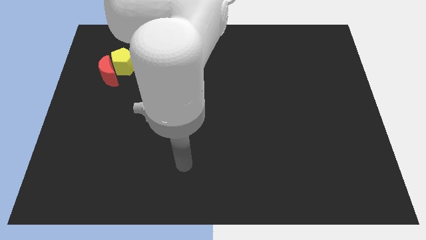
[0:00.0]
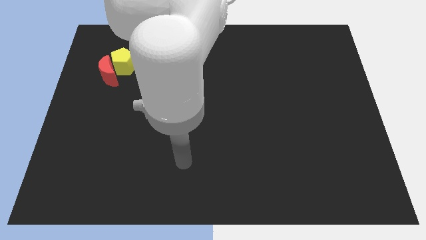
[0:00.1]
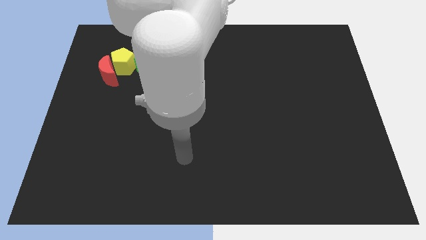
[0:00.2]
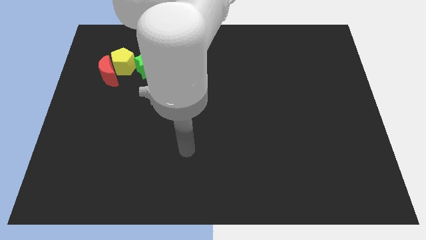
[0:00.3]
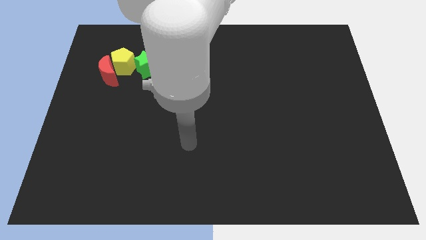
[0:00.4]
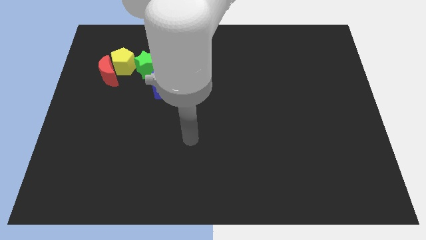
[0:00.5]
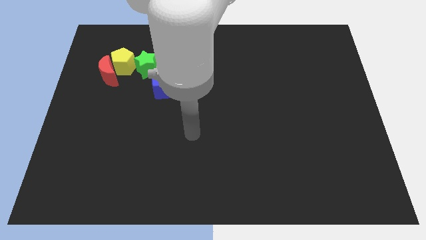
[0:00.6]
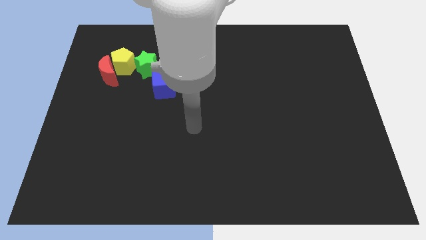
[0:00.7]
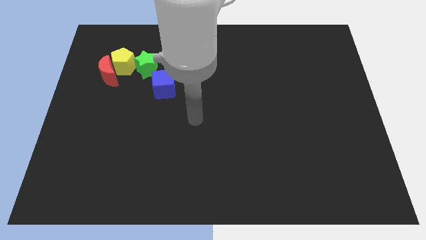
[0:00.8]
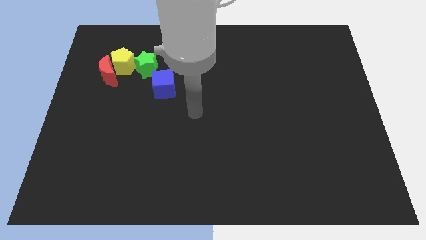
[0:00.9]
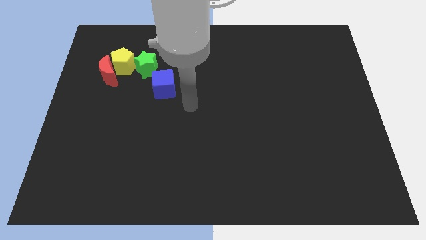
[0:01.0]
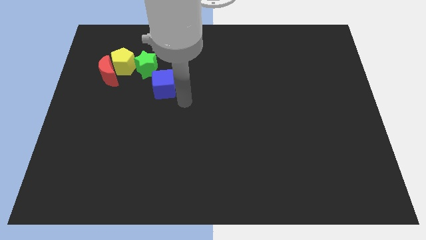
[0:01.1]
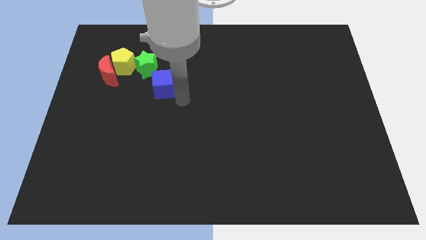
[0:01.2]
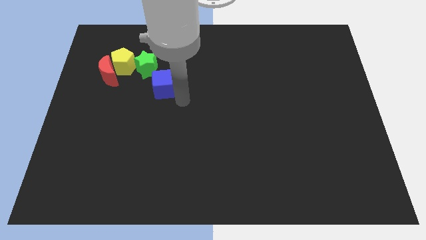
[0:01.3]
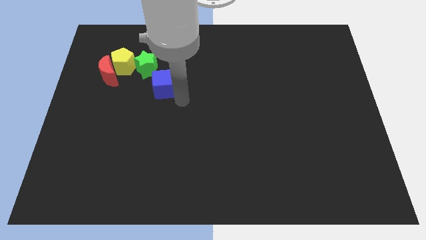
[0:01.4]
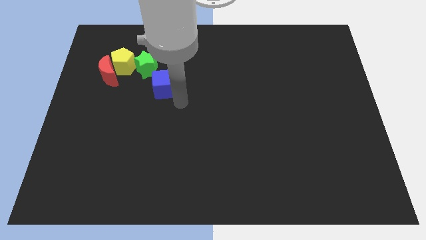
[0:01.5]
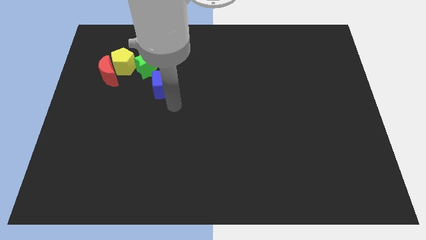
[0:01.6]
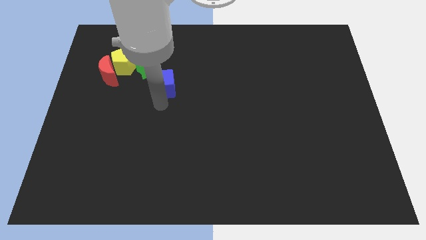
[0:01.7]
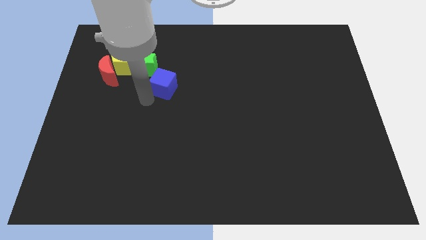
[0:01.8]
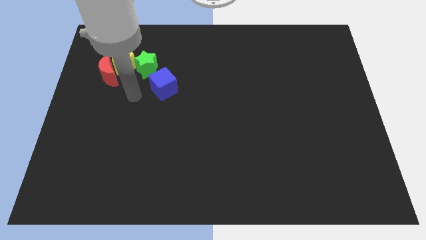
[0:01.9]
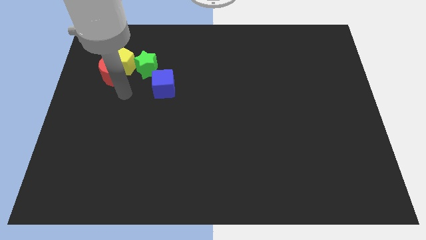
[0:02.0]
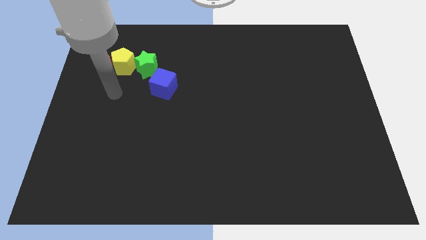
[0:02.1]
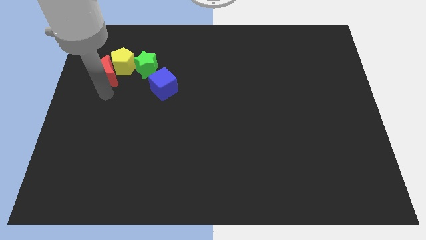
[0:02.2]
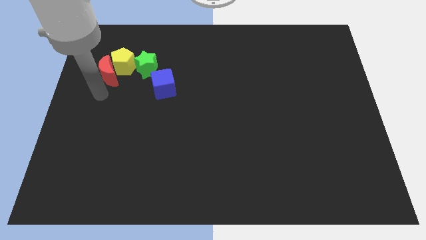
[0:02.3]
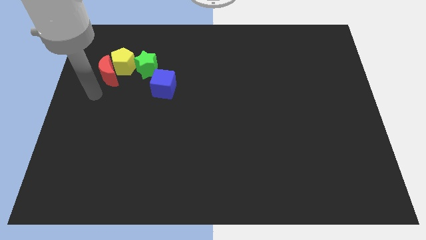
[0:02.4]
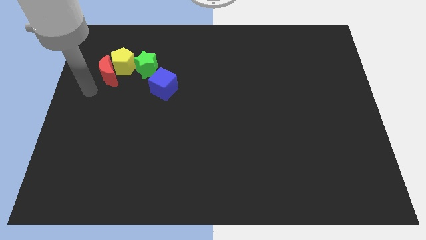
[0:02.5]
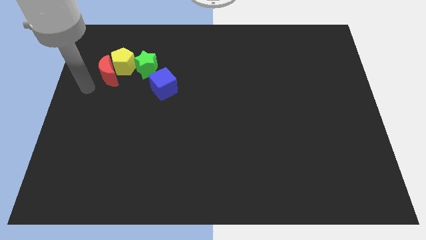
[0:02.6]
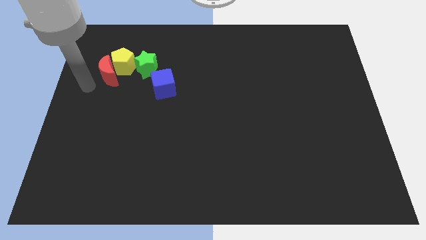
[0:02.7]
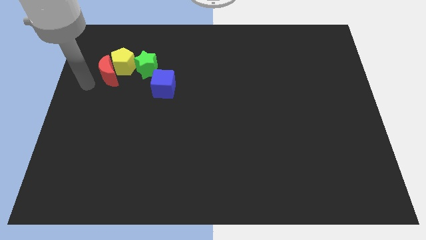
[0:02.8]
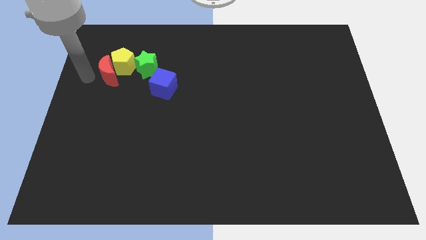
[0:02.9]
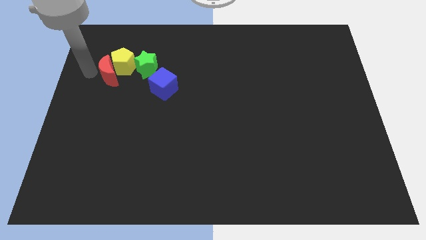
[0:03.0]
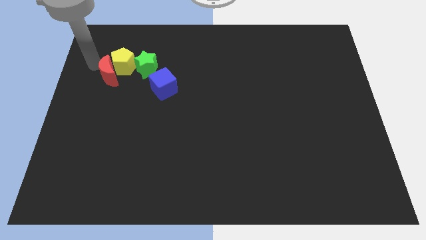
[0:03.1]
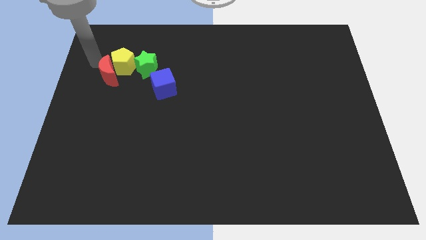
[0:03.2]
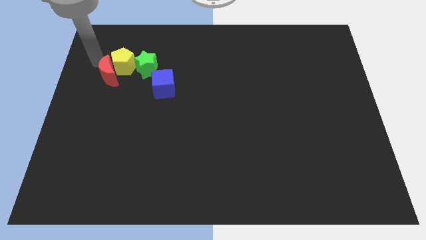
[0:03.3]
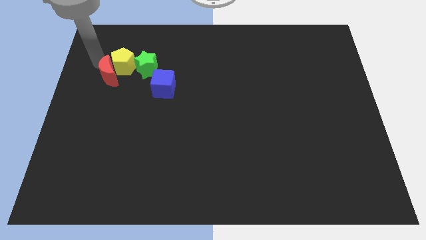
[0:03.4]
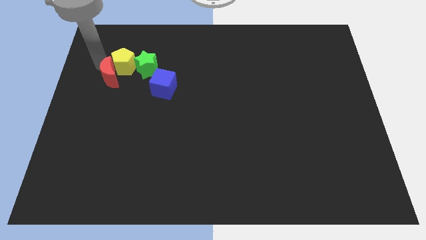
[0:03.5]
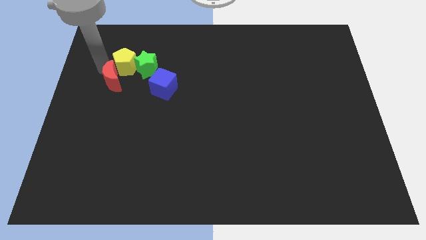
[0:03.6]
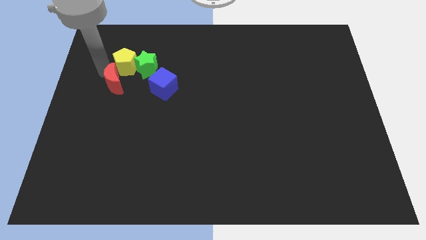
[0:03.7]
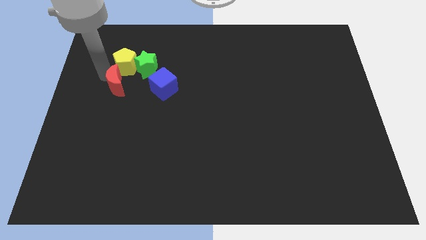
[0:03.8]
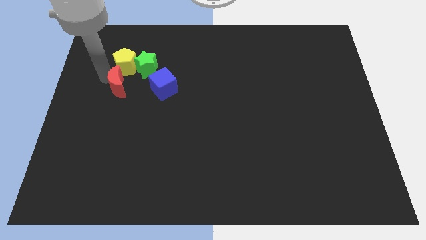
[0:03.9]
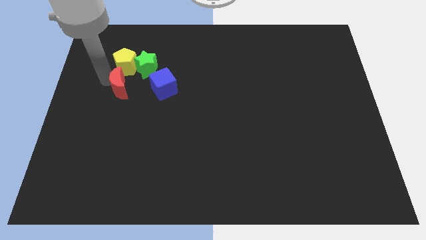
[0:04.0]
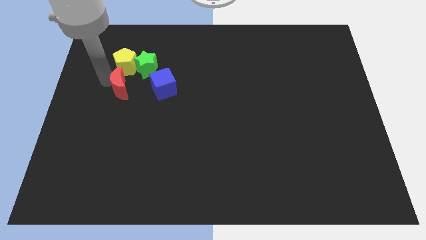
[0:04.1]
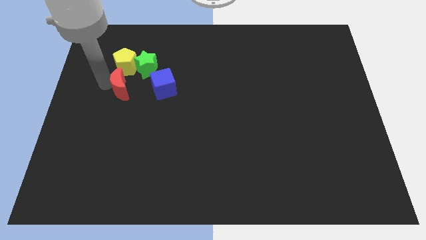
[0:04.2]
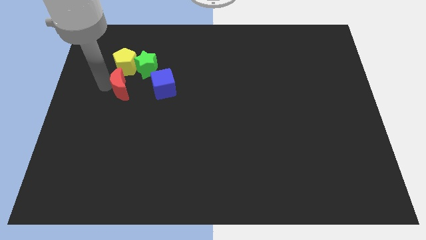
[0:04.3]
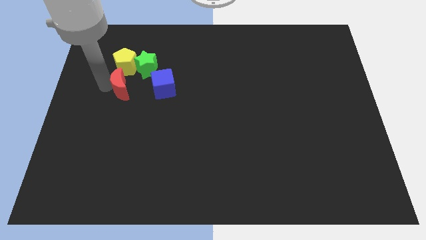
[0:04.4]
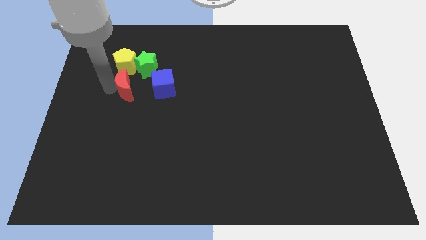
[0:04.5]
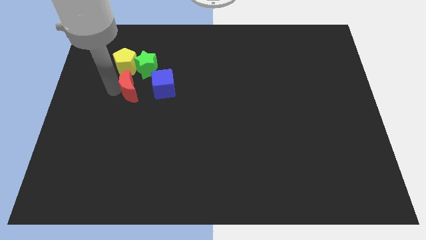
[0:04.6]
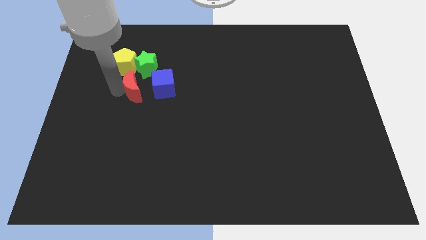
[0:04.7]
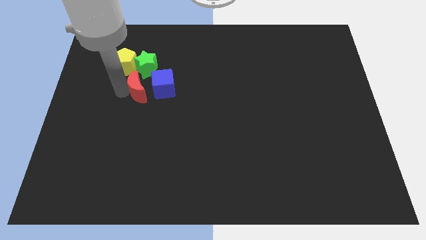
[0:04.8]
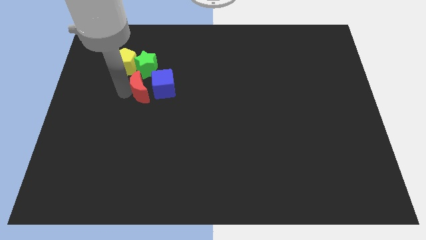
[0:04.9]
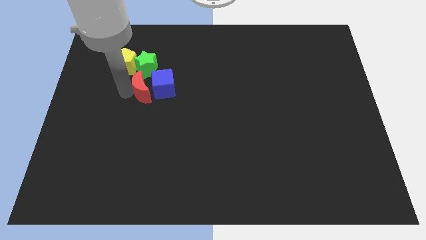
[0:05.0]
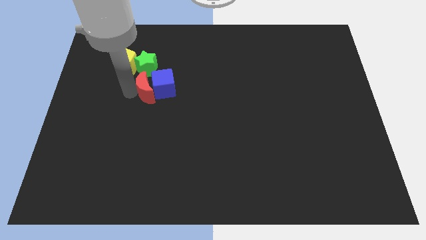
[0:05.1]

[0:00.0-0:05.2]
slide the red moon to the blue cube

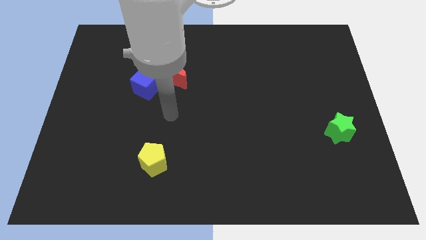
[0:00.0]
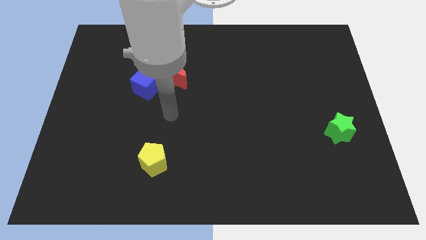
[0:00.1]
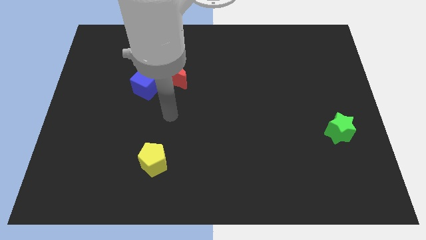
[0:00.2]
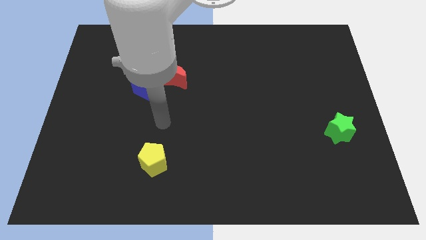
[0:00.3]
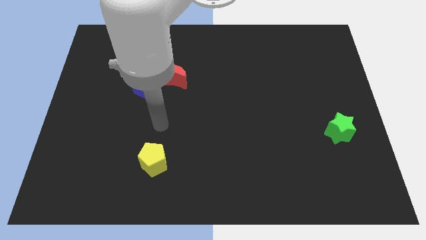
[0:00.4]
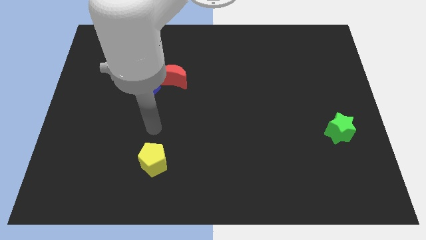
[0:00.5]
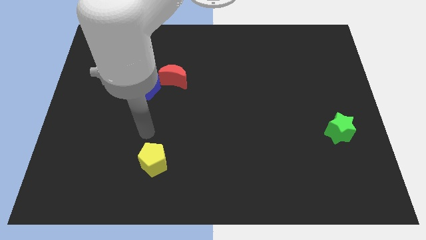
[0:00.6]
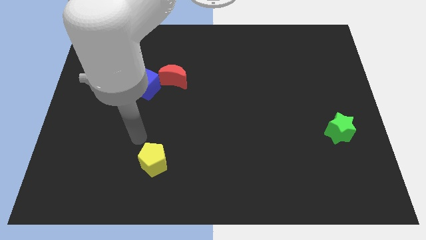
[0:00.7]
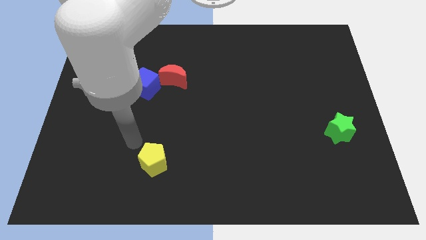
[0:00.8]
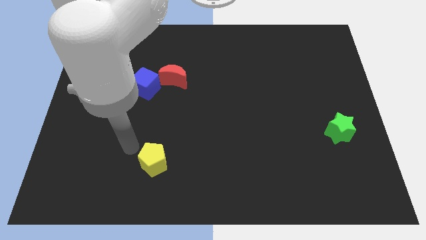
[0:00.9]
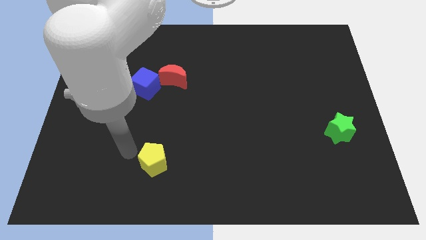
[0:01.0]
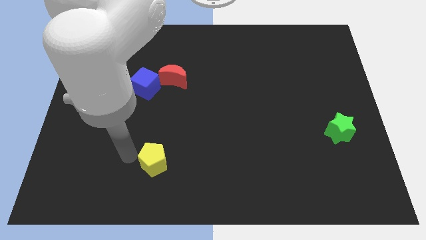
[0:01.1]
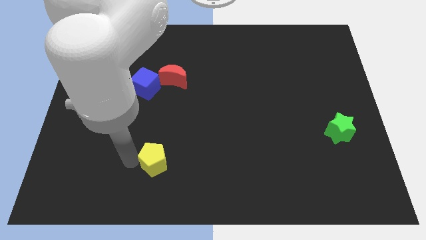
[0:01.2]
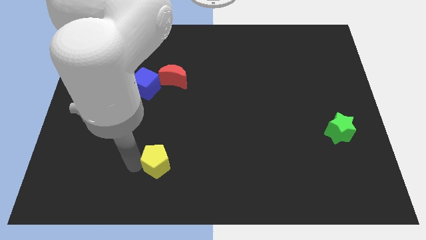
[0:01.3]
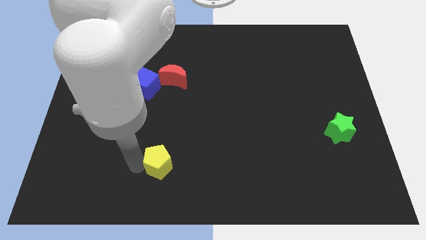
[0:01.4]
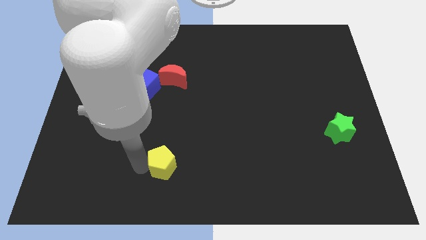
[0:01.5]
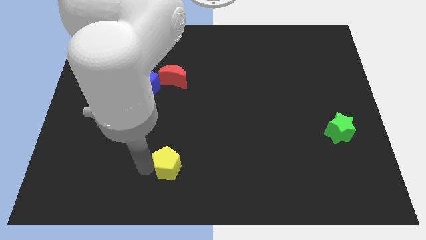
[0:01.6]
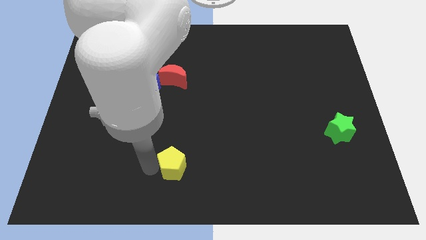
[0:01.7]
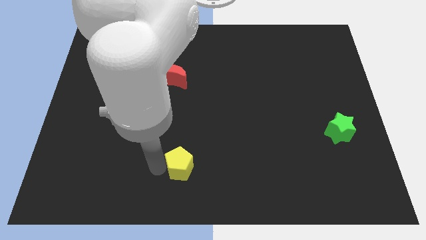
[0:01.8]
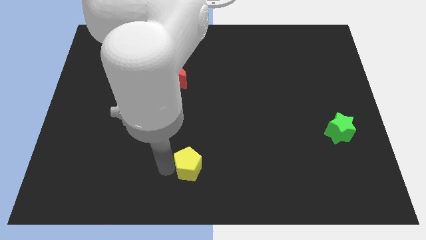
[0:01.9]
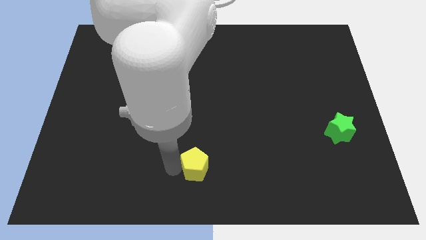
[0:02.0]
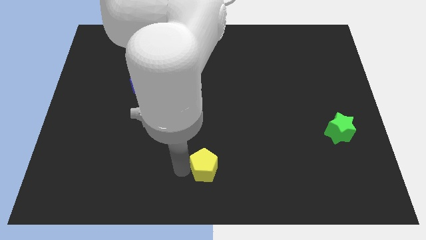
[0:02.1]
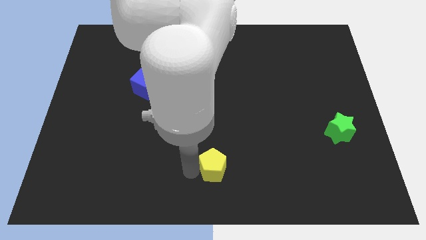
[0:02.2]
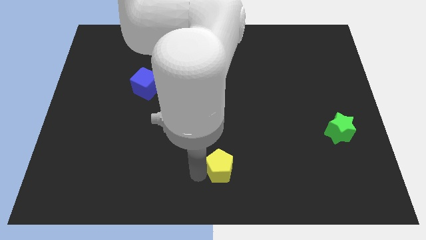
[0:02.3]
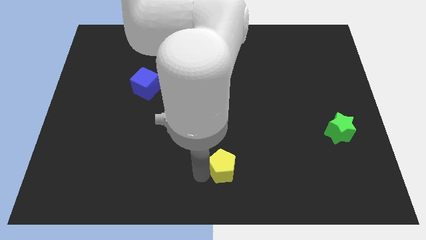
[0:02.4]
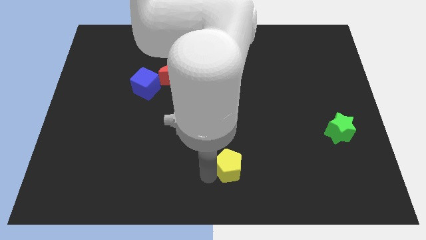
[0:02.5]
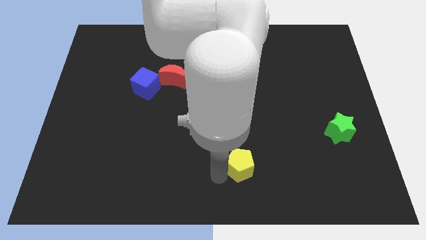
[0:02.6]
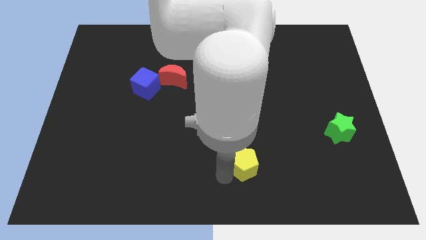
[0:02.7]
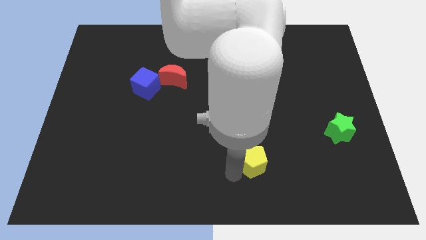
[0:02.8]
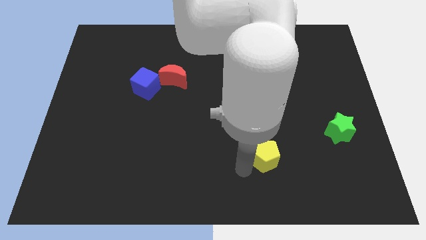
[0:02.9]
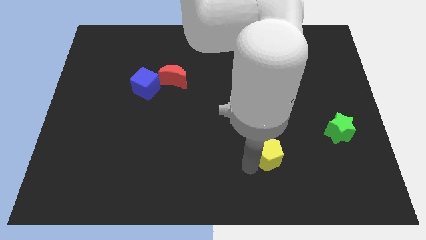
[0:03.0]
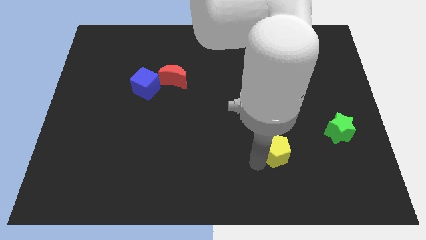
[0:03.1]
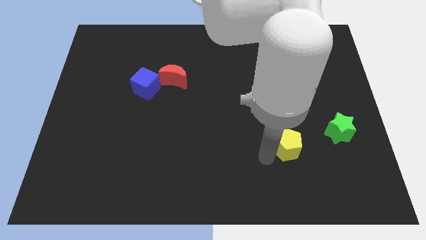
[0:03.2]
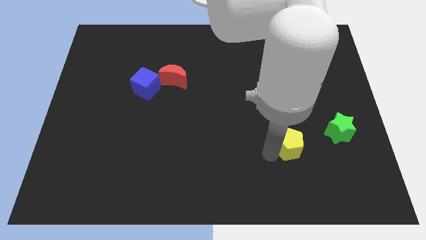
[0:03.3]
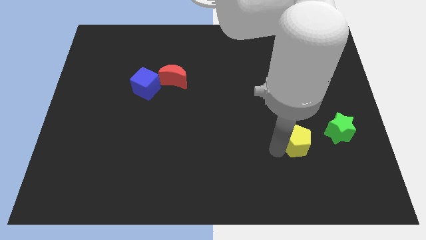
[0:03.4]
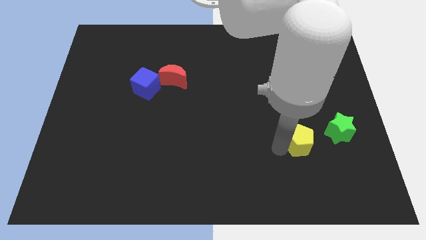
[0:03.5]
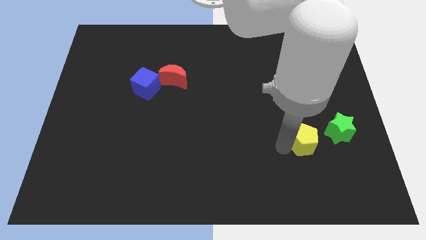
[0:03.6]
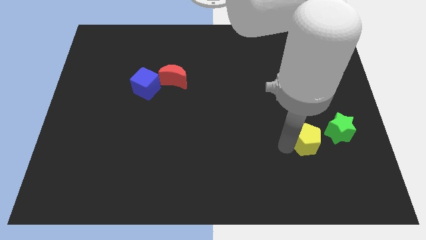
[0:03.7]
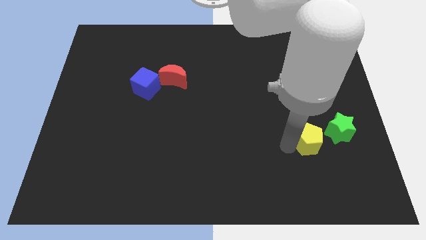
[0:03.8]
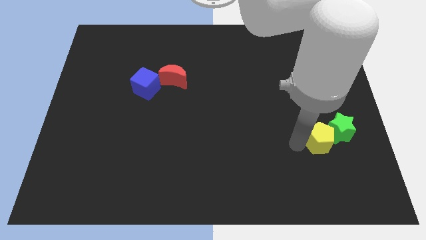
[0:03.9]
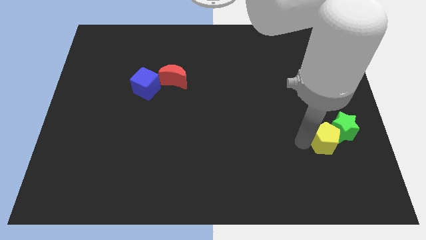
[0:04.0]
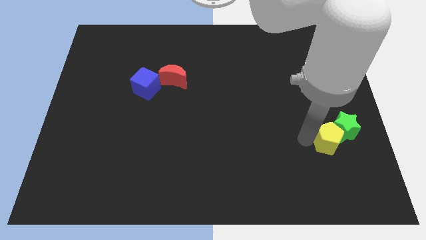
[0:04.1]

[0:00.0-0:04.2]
push the yellow block next to the green block
